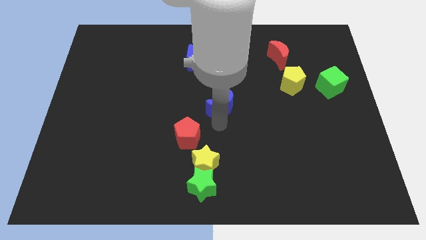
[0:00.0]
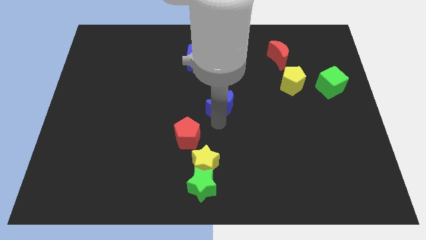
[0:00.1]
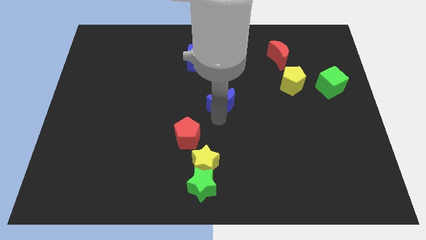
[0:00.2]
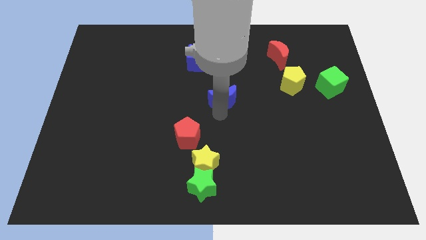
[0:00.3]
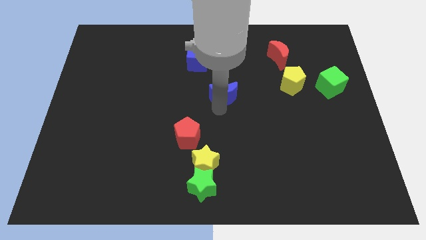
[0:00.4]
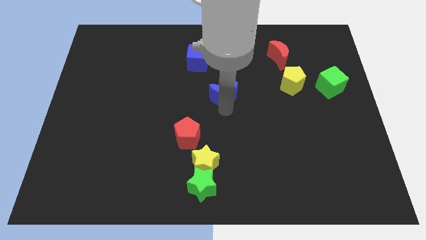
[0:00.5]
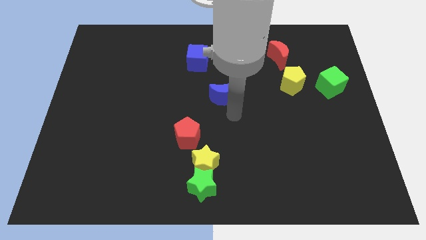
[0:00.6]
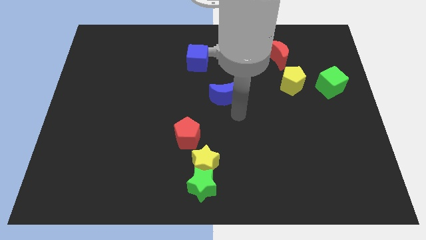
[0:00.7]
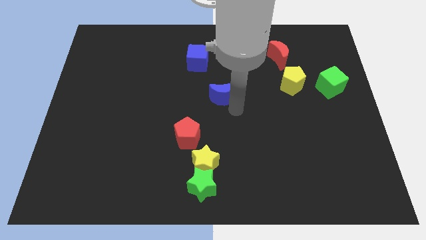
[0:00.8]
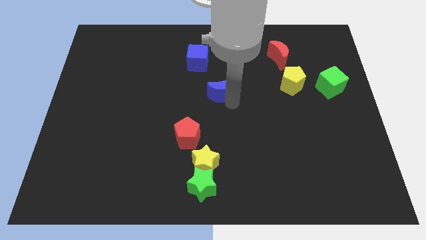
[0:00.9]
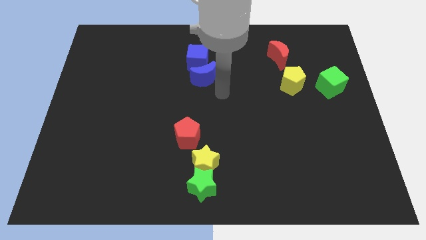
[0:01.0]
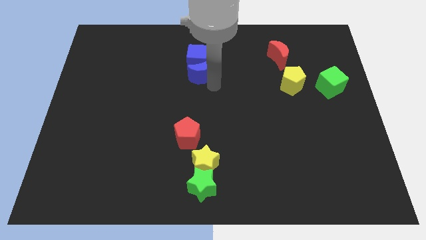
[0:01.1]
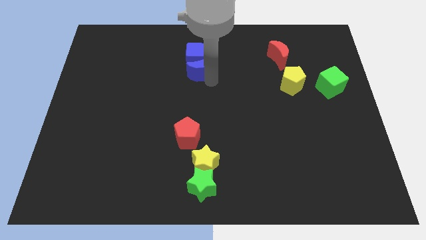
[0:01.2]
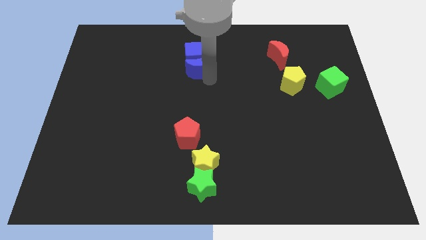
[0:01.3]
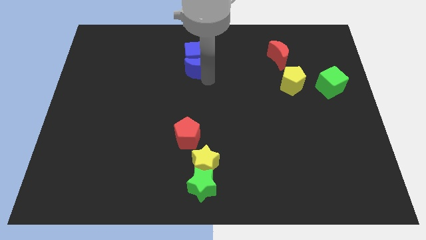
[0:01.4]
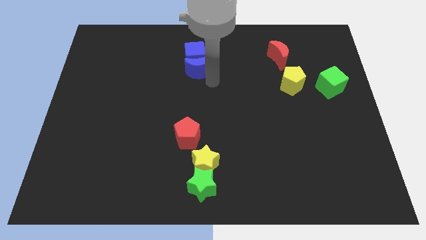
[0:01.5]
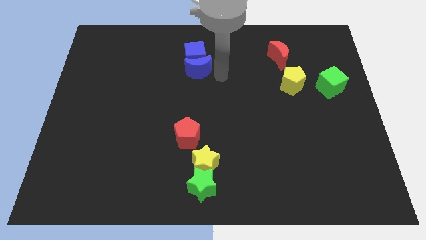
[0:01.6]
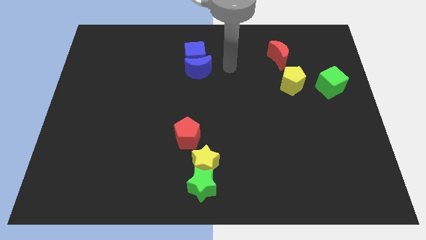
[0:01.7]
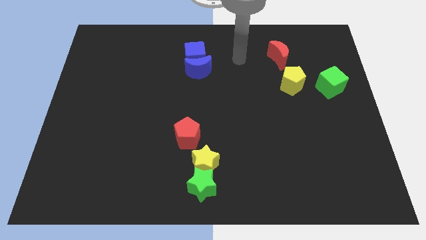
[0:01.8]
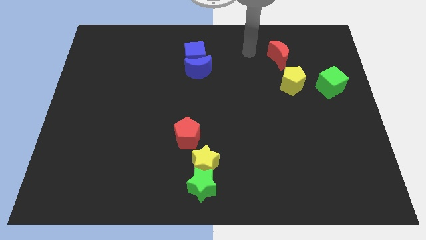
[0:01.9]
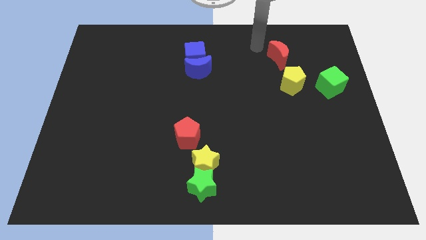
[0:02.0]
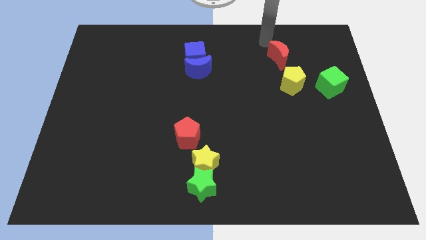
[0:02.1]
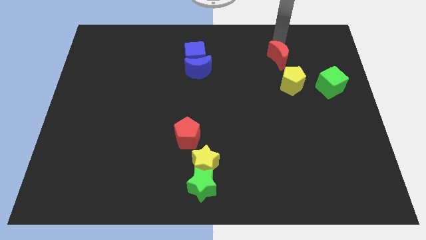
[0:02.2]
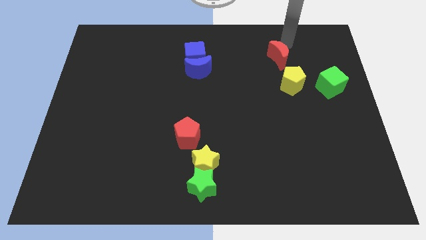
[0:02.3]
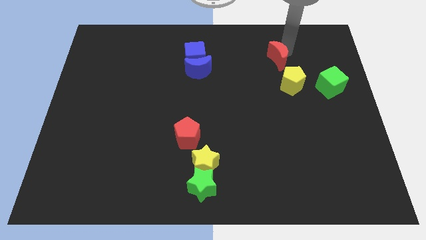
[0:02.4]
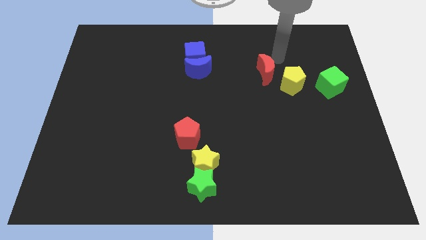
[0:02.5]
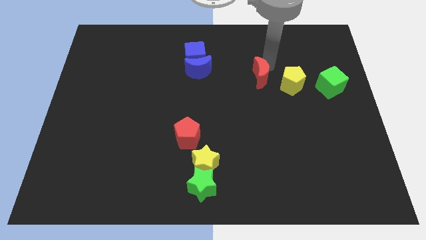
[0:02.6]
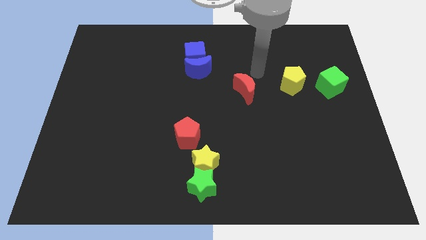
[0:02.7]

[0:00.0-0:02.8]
push red crescent beside yellow pentagon

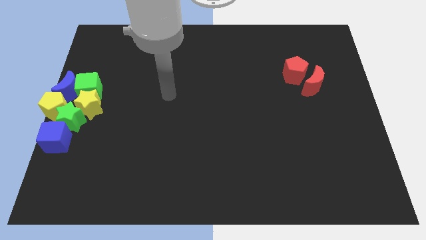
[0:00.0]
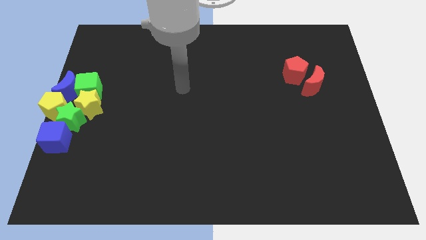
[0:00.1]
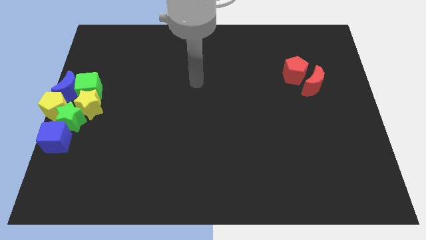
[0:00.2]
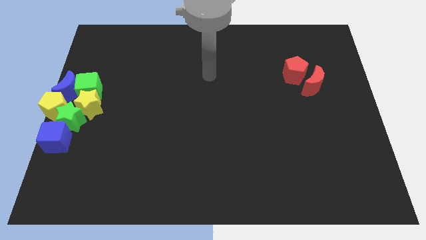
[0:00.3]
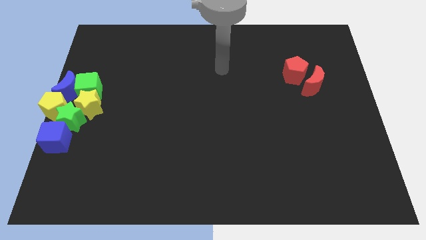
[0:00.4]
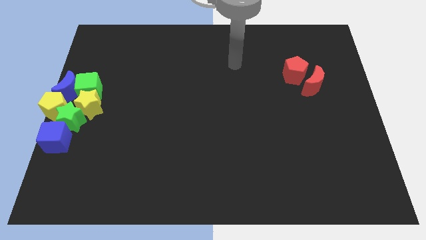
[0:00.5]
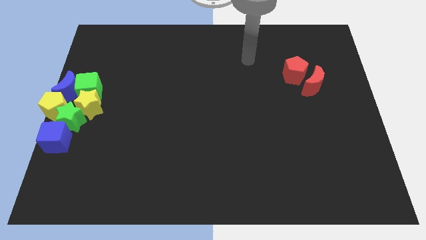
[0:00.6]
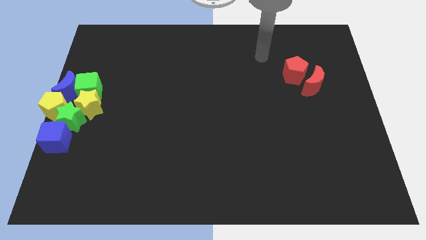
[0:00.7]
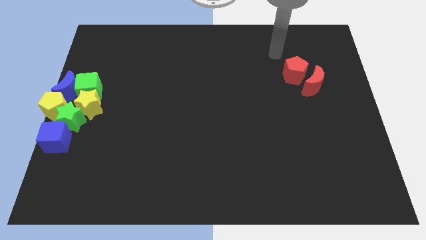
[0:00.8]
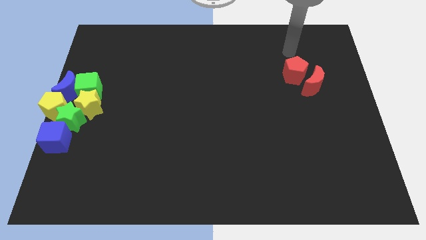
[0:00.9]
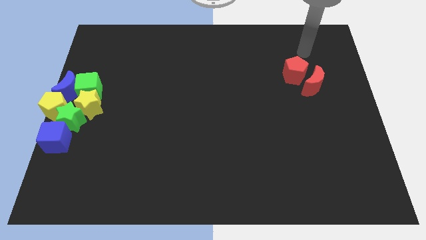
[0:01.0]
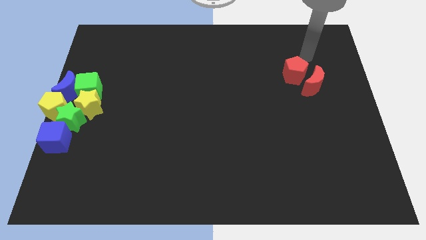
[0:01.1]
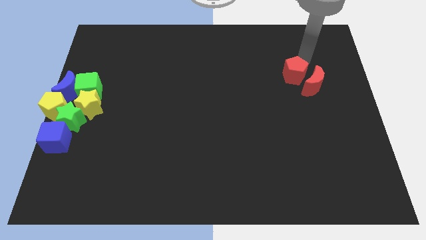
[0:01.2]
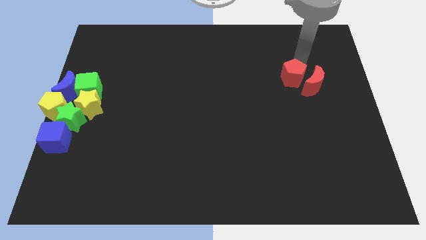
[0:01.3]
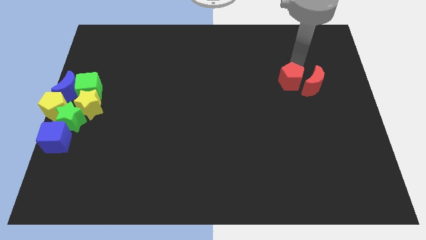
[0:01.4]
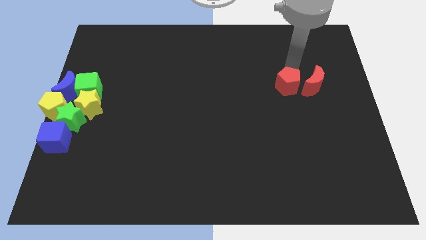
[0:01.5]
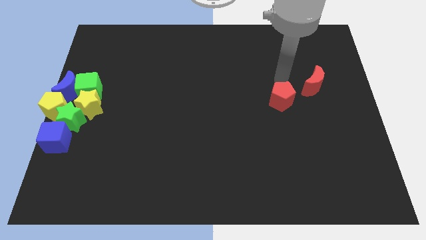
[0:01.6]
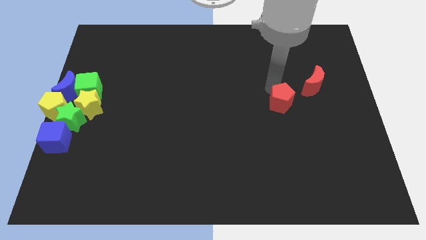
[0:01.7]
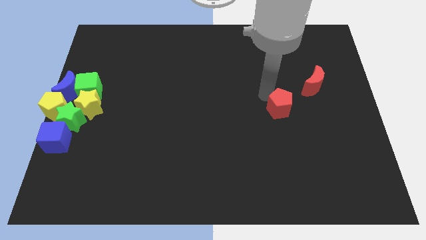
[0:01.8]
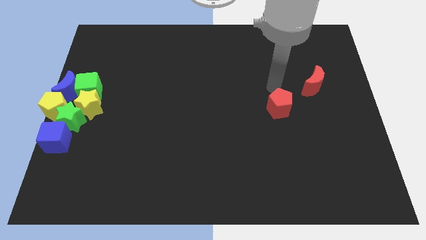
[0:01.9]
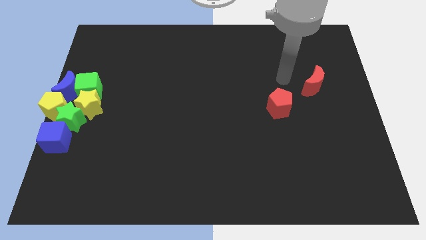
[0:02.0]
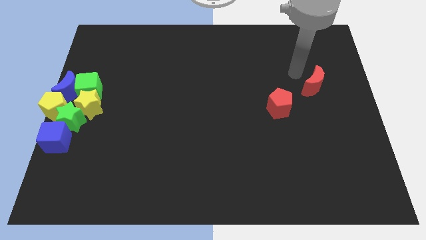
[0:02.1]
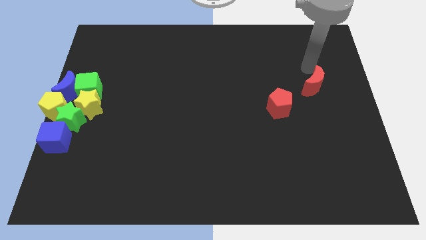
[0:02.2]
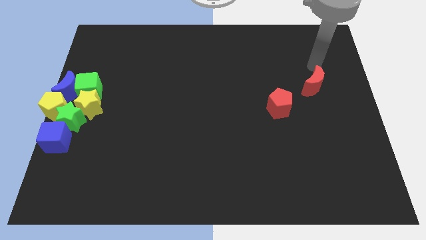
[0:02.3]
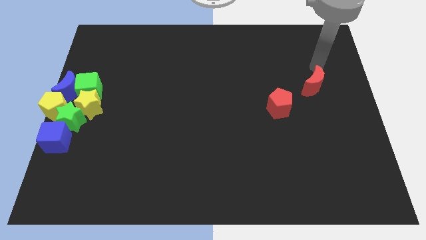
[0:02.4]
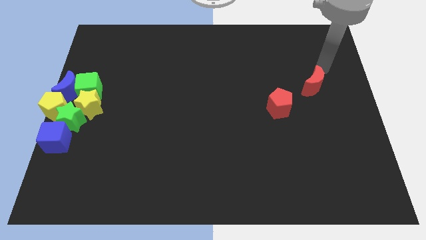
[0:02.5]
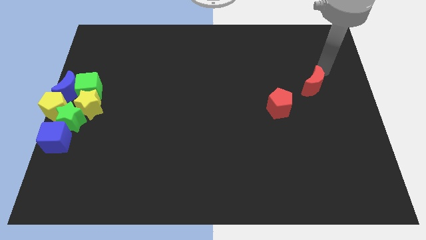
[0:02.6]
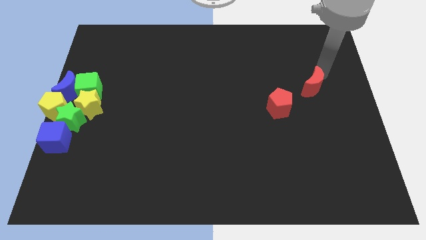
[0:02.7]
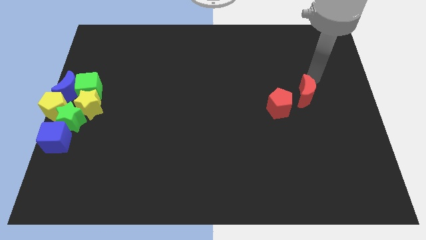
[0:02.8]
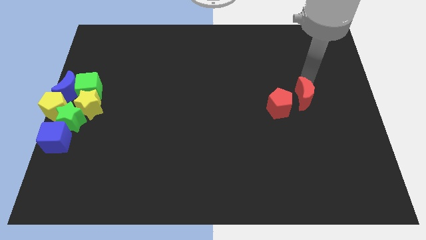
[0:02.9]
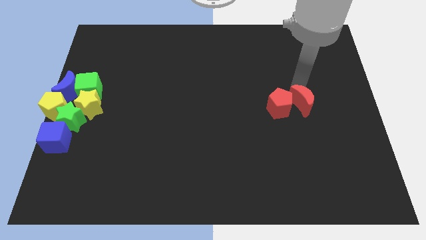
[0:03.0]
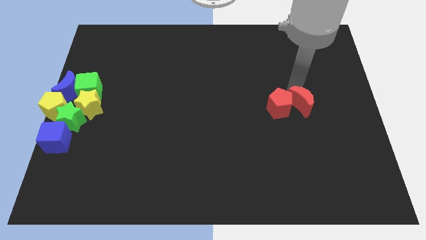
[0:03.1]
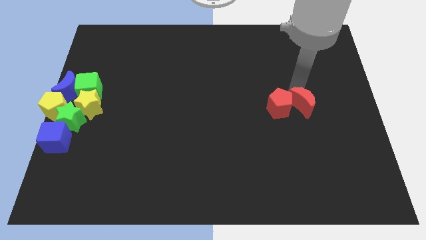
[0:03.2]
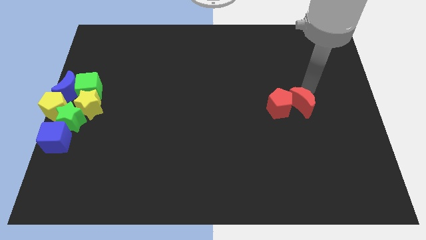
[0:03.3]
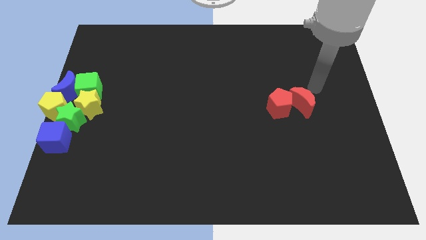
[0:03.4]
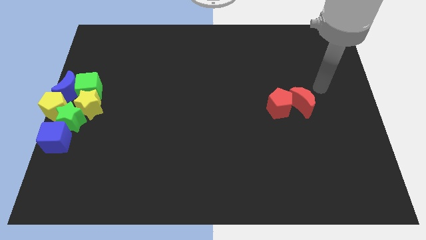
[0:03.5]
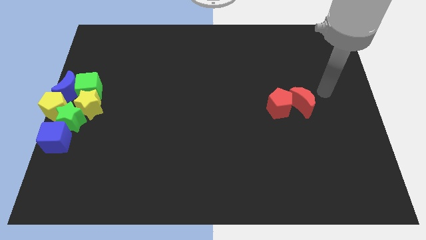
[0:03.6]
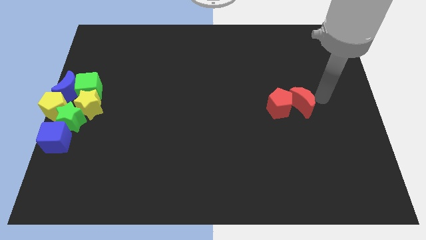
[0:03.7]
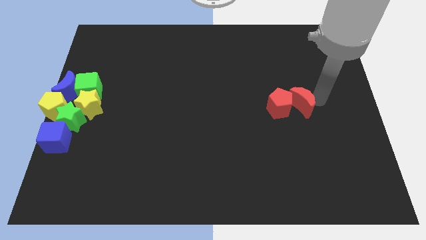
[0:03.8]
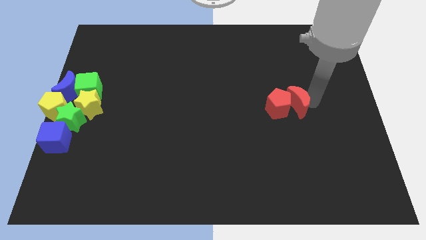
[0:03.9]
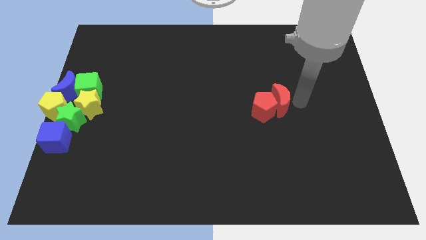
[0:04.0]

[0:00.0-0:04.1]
slightly move the red blocks towards the left side

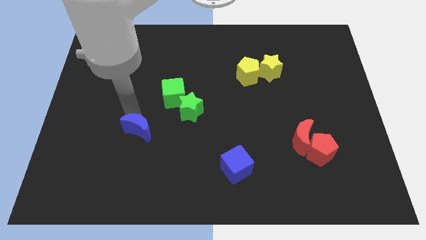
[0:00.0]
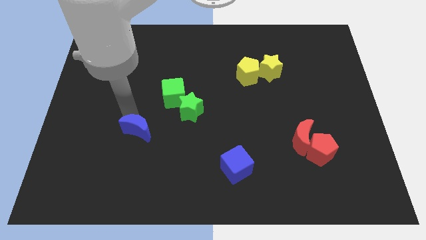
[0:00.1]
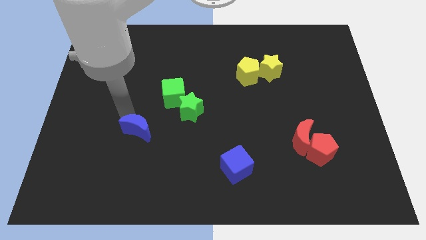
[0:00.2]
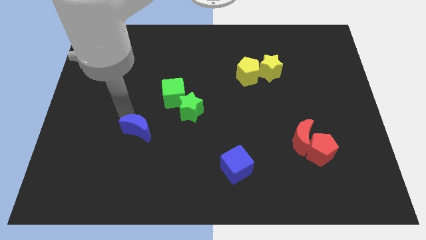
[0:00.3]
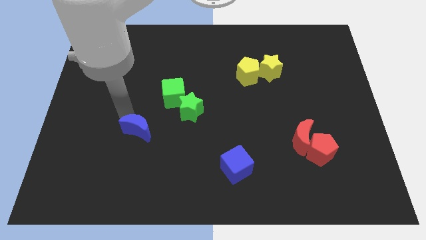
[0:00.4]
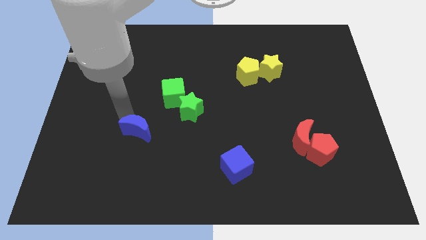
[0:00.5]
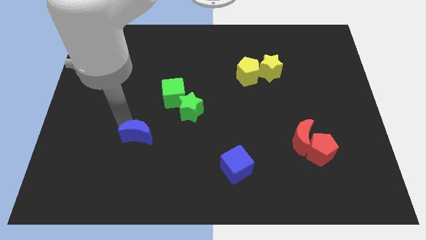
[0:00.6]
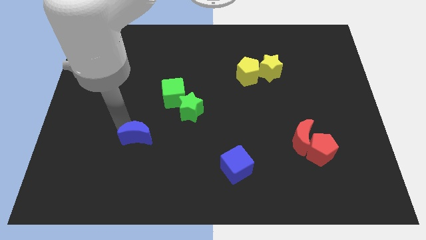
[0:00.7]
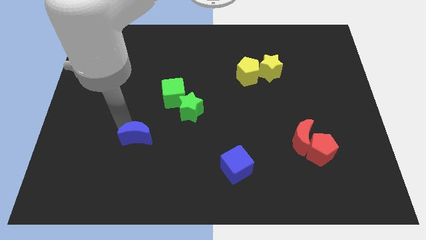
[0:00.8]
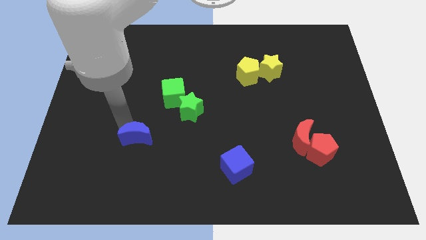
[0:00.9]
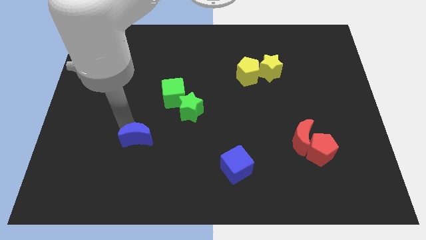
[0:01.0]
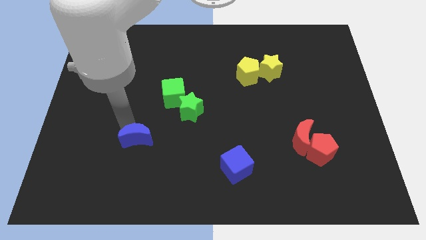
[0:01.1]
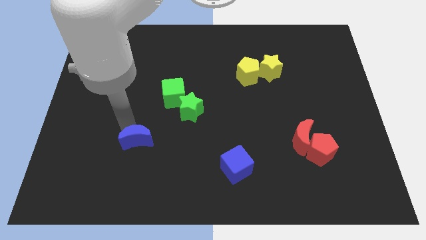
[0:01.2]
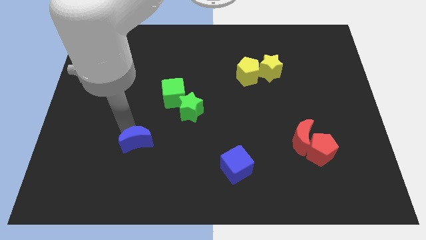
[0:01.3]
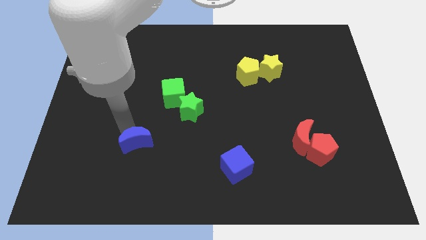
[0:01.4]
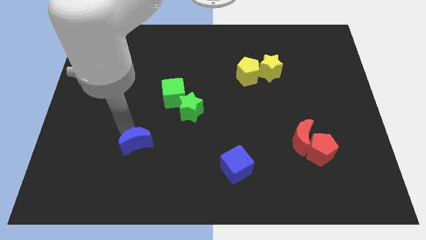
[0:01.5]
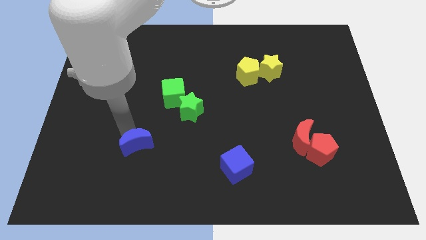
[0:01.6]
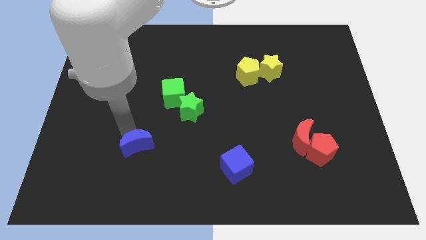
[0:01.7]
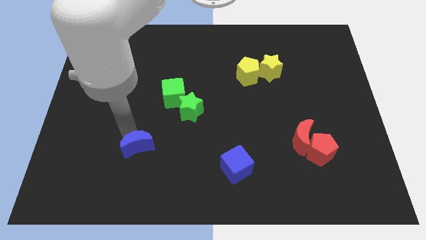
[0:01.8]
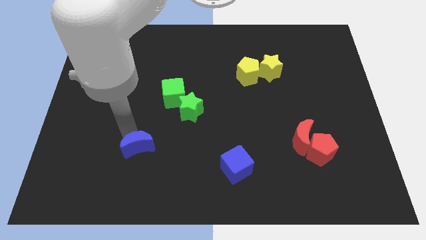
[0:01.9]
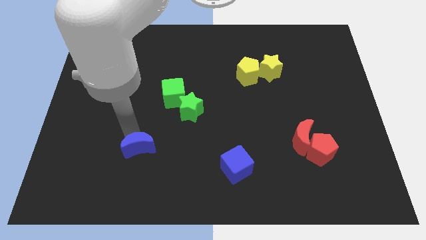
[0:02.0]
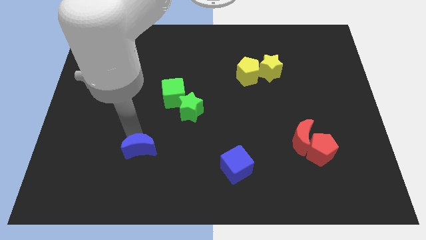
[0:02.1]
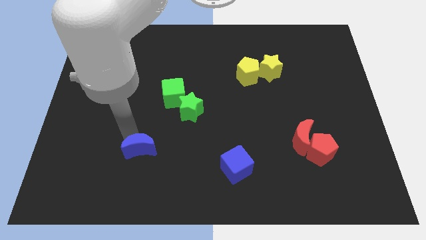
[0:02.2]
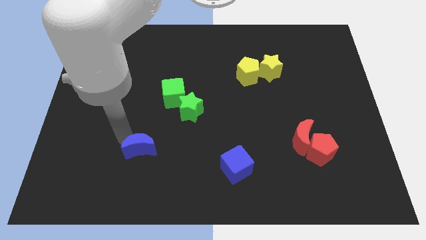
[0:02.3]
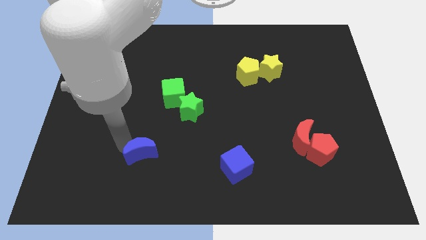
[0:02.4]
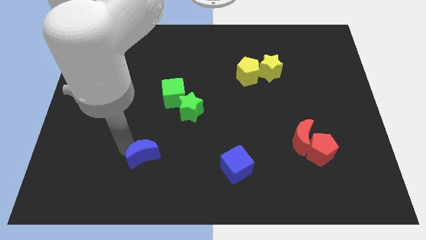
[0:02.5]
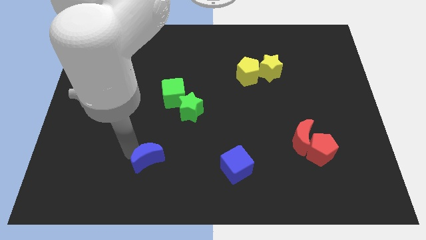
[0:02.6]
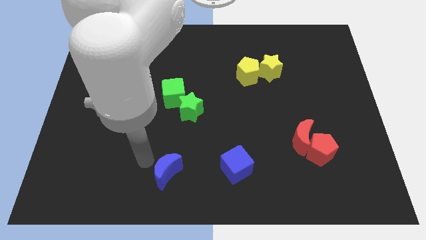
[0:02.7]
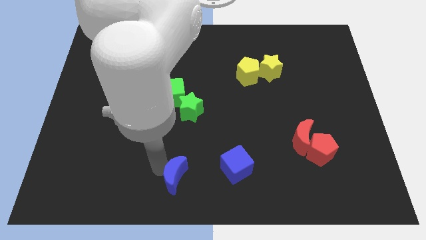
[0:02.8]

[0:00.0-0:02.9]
push the blue moon towards the blue cube
